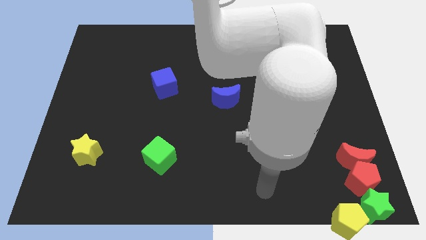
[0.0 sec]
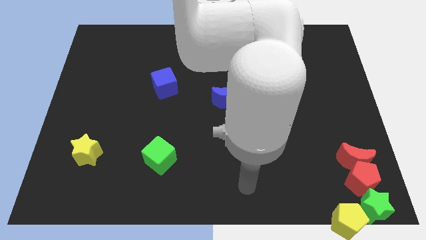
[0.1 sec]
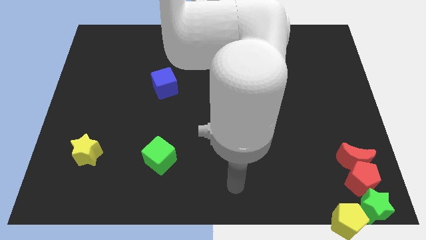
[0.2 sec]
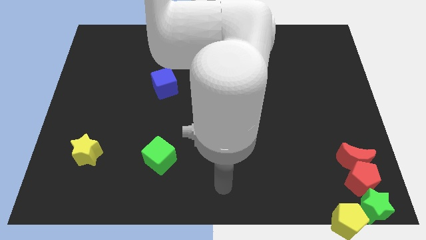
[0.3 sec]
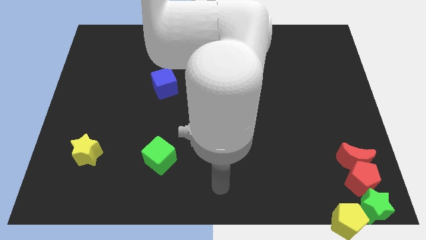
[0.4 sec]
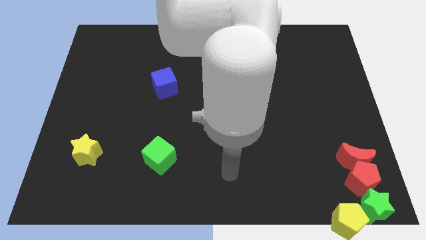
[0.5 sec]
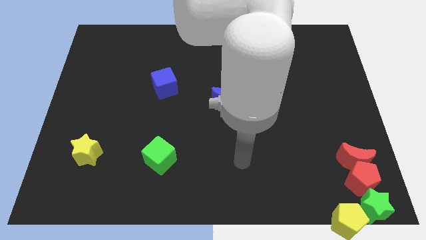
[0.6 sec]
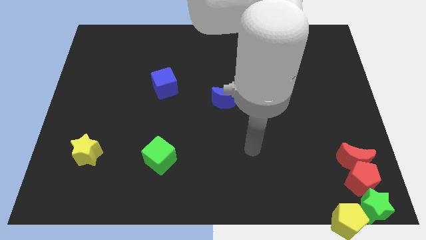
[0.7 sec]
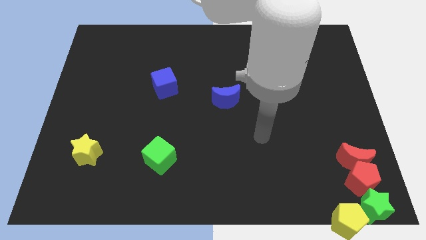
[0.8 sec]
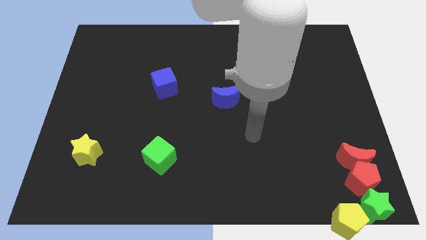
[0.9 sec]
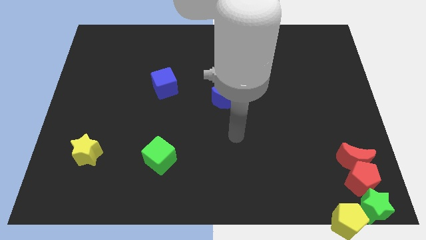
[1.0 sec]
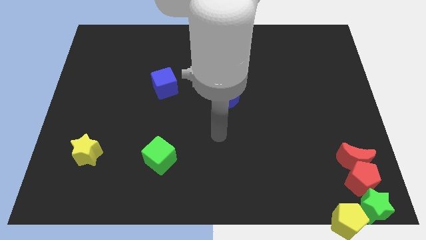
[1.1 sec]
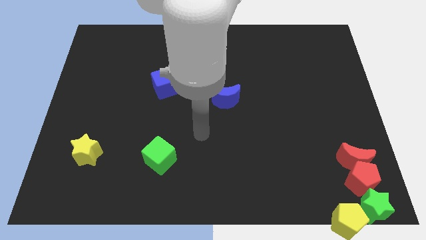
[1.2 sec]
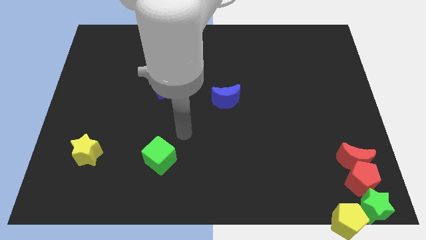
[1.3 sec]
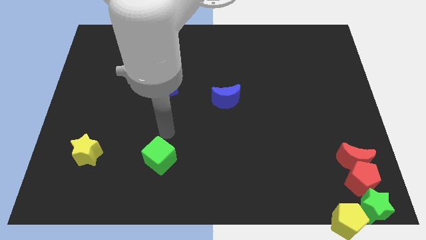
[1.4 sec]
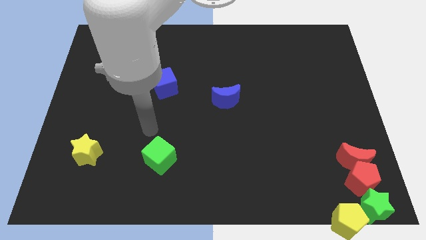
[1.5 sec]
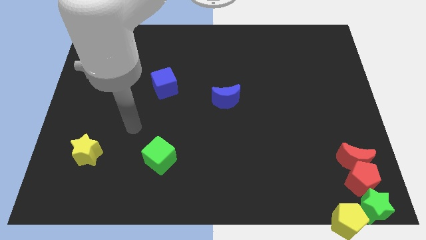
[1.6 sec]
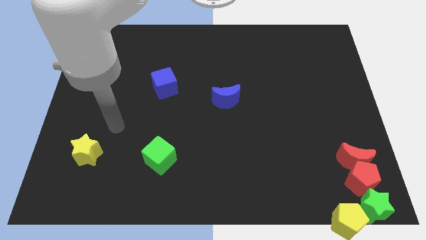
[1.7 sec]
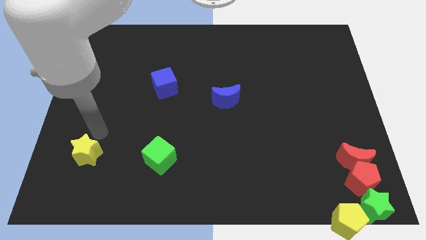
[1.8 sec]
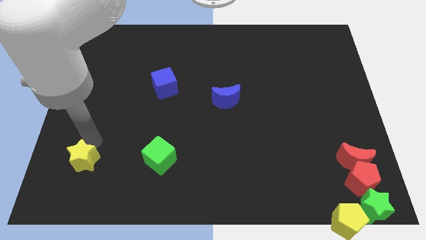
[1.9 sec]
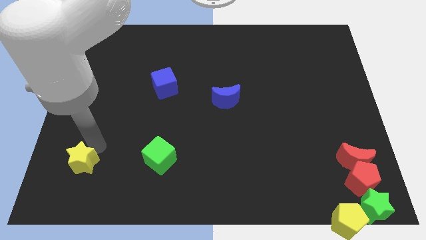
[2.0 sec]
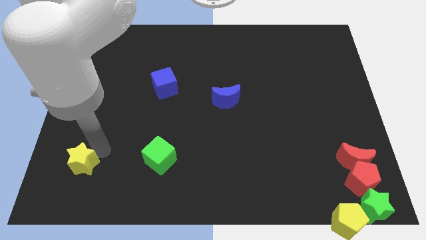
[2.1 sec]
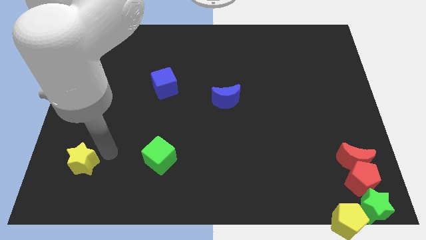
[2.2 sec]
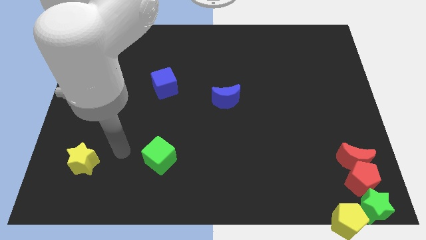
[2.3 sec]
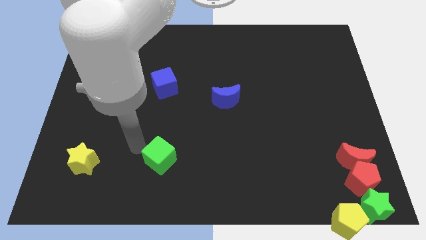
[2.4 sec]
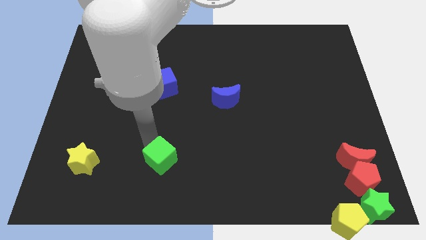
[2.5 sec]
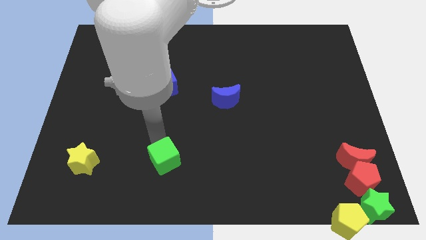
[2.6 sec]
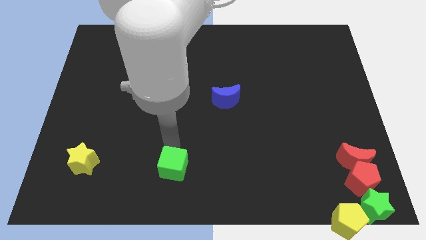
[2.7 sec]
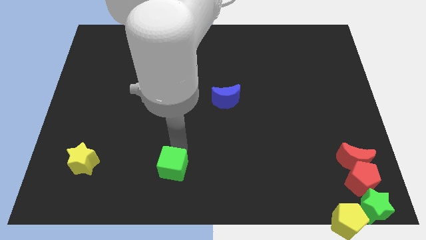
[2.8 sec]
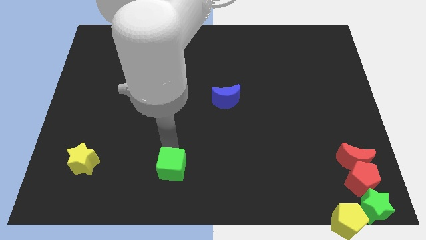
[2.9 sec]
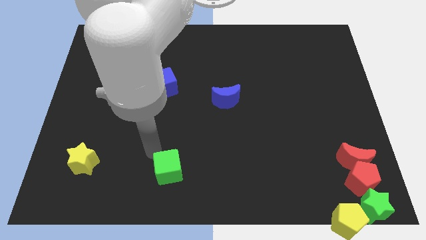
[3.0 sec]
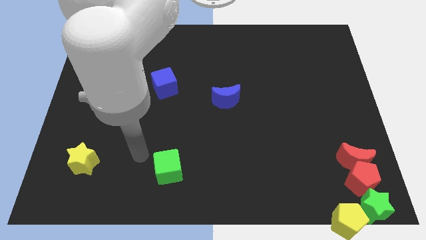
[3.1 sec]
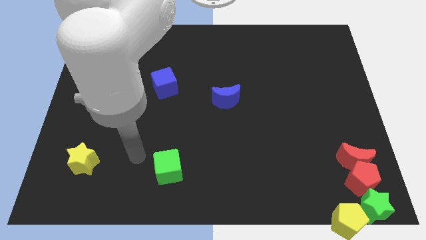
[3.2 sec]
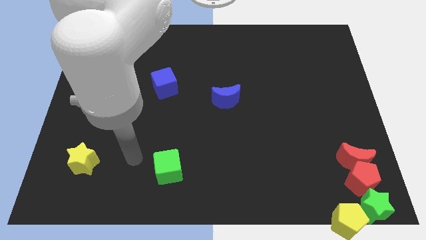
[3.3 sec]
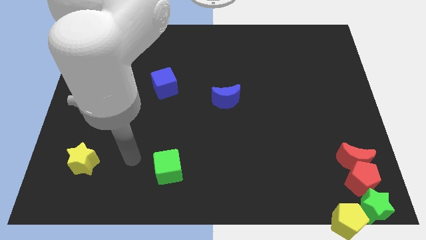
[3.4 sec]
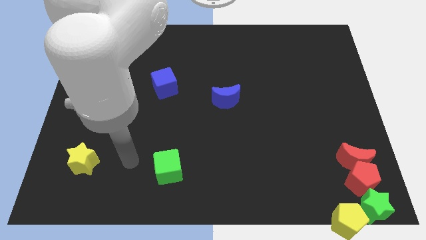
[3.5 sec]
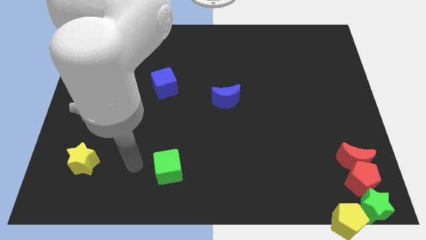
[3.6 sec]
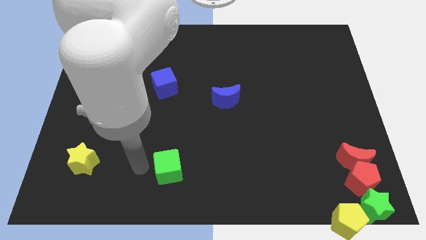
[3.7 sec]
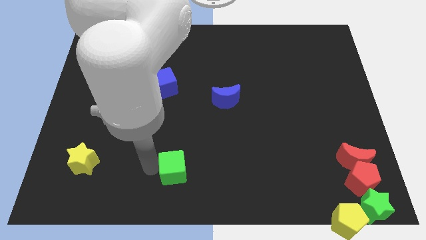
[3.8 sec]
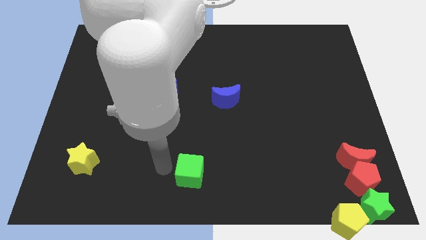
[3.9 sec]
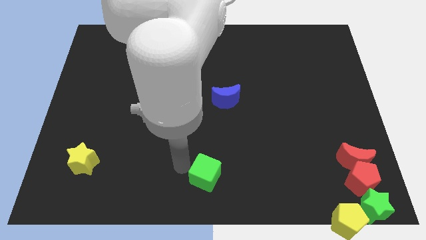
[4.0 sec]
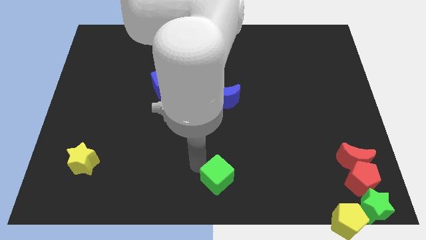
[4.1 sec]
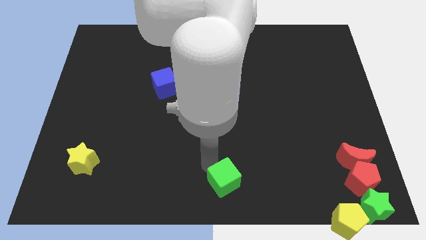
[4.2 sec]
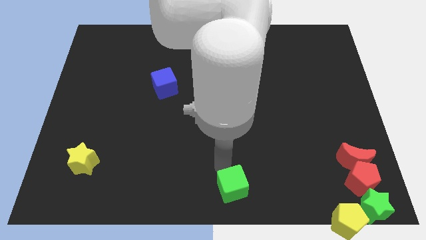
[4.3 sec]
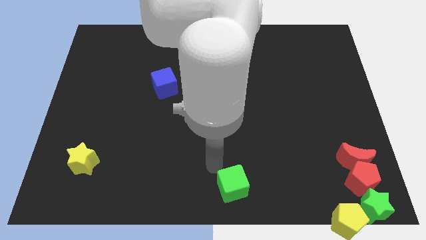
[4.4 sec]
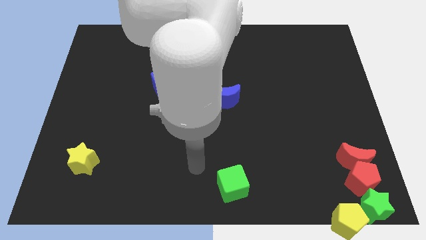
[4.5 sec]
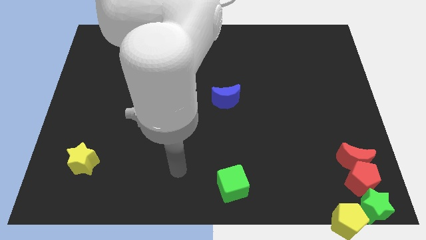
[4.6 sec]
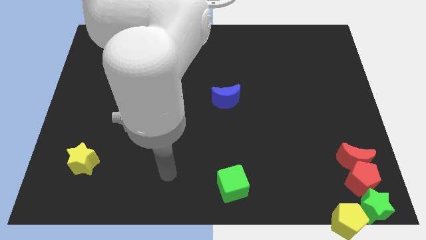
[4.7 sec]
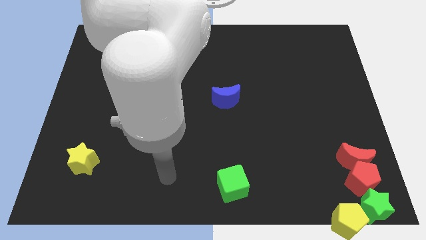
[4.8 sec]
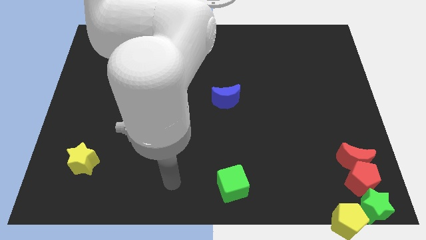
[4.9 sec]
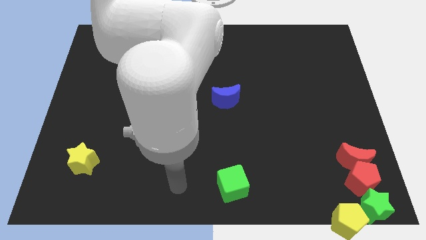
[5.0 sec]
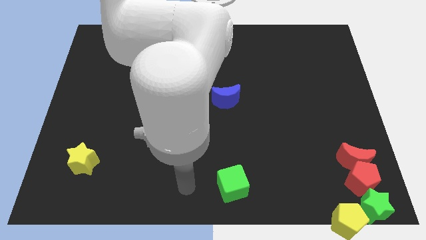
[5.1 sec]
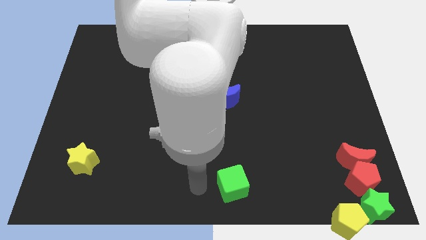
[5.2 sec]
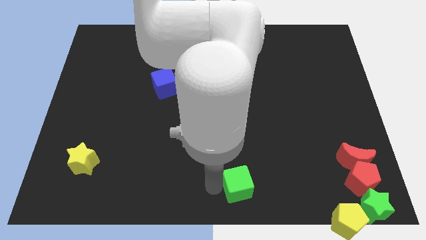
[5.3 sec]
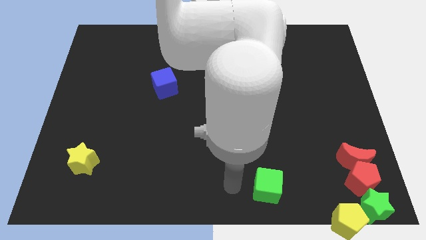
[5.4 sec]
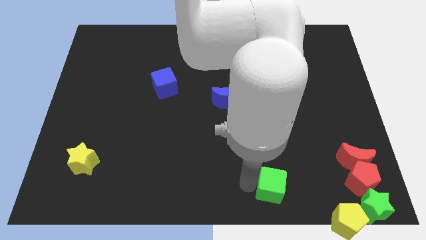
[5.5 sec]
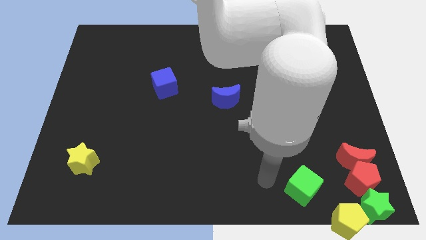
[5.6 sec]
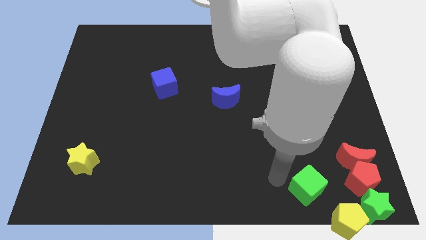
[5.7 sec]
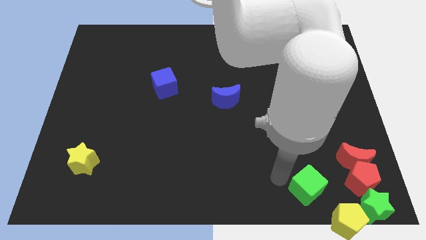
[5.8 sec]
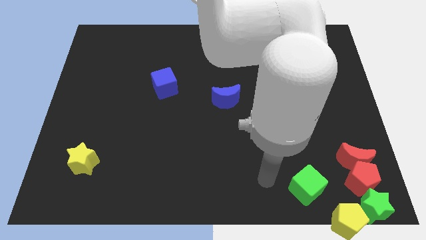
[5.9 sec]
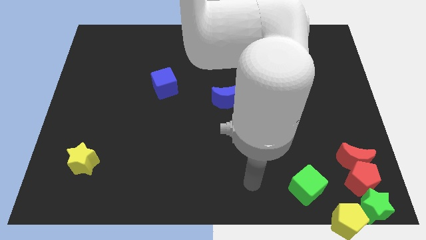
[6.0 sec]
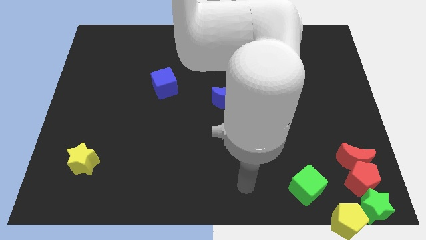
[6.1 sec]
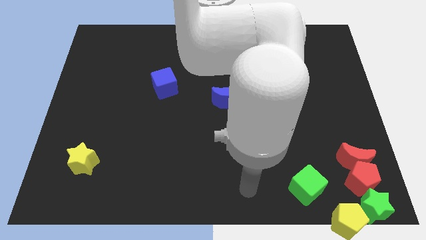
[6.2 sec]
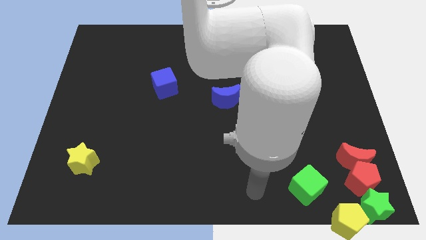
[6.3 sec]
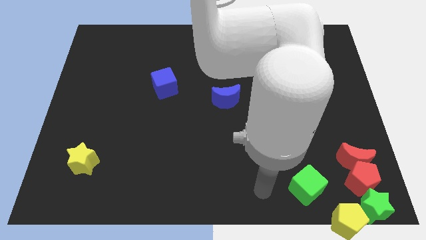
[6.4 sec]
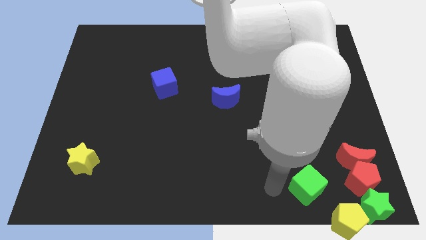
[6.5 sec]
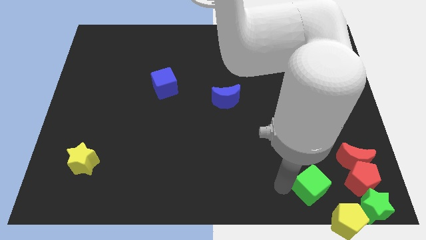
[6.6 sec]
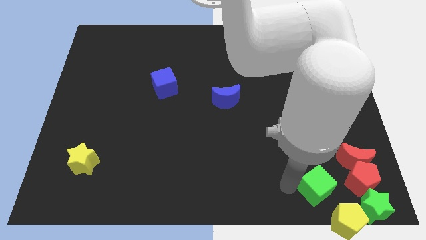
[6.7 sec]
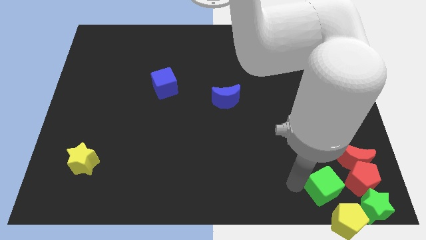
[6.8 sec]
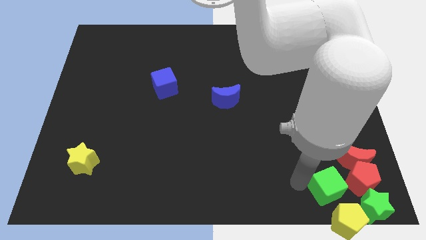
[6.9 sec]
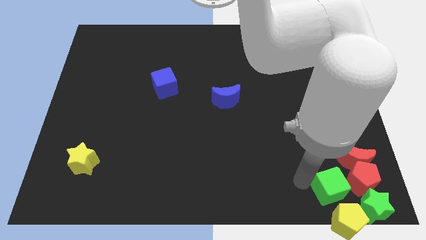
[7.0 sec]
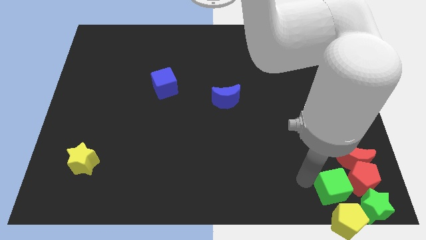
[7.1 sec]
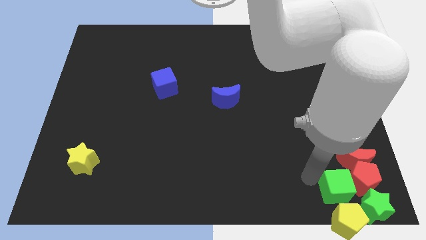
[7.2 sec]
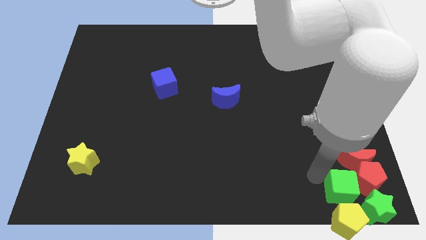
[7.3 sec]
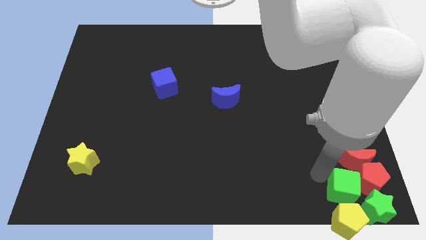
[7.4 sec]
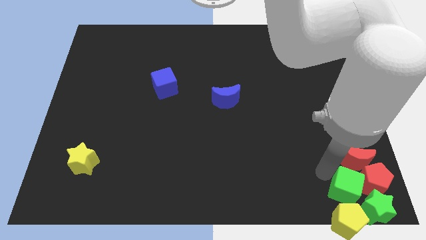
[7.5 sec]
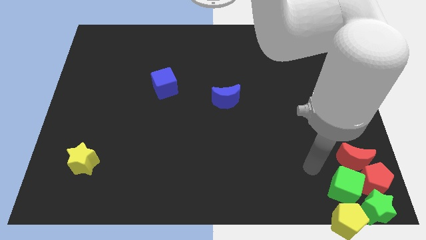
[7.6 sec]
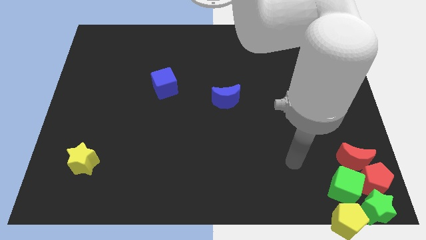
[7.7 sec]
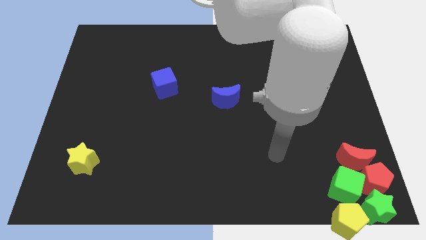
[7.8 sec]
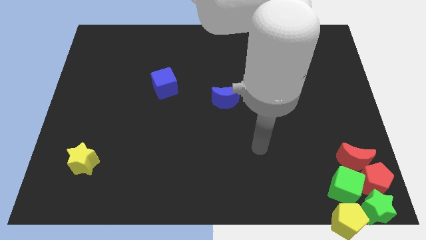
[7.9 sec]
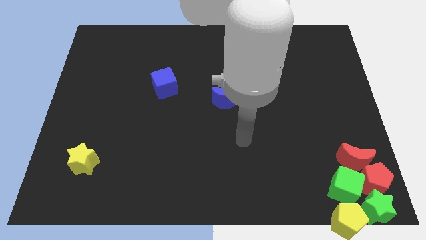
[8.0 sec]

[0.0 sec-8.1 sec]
push the green cube into the red pentagon

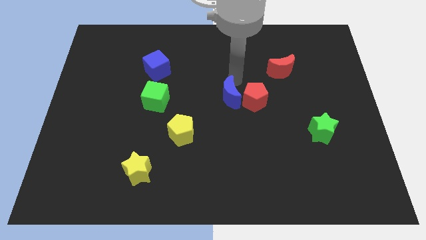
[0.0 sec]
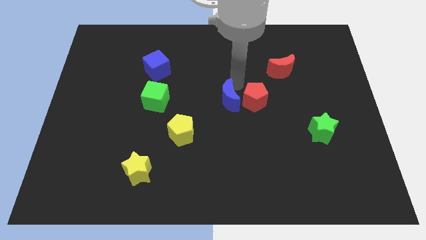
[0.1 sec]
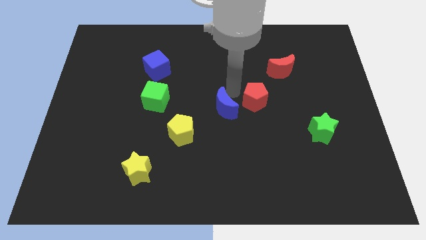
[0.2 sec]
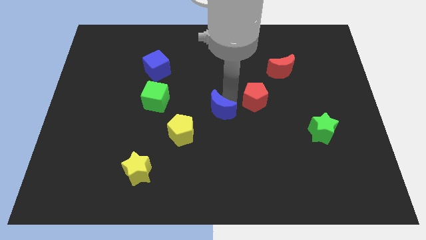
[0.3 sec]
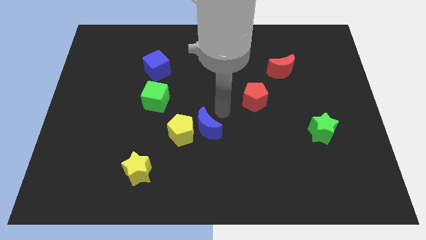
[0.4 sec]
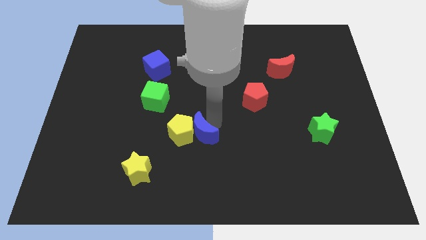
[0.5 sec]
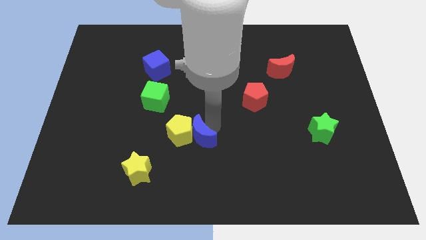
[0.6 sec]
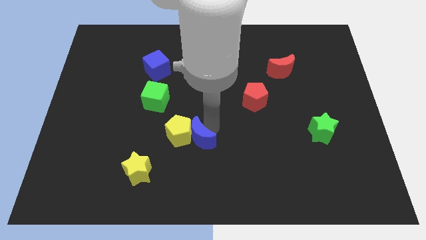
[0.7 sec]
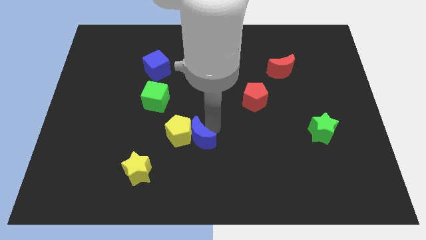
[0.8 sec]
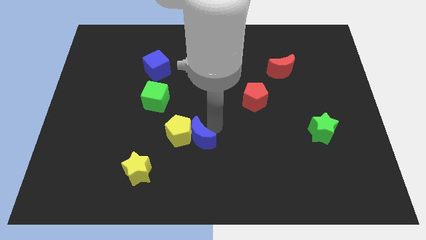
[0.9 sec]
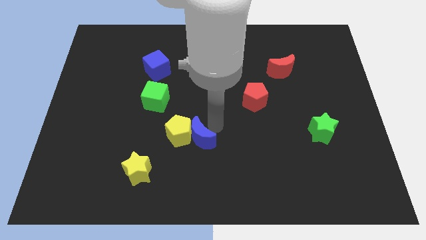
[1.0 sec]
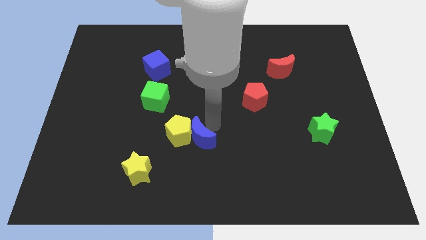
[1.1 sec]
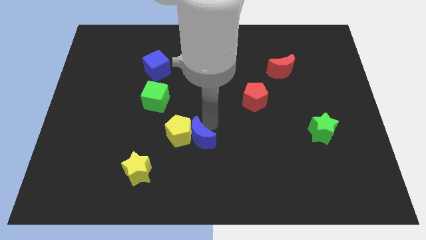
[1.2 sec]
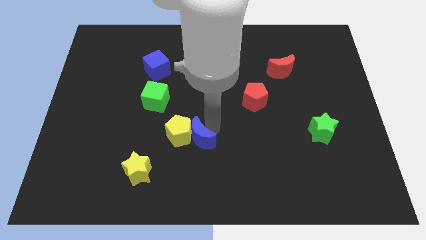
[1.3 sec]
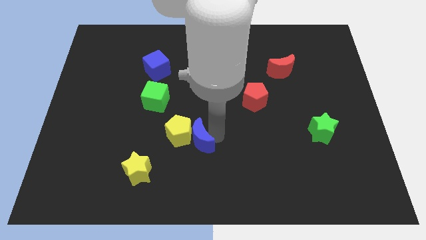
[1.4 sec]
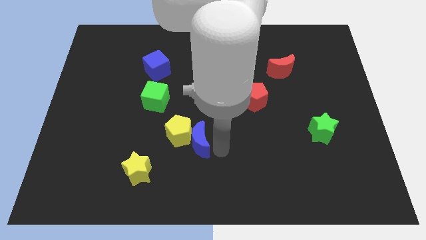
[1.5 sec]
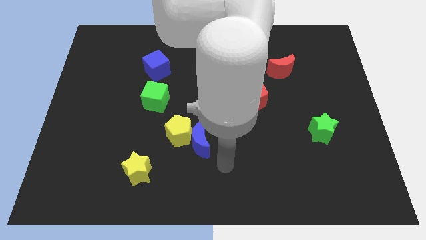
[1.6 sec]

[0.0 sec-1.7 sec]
slide blue moon into the yellow pentagon
